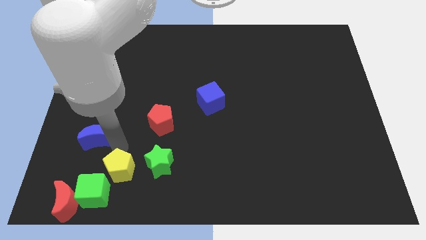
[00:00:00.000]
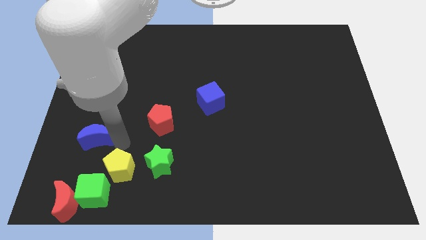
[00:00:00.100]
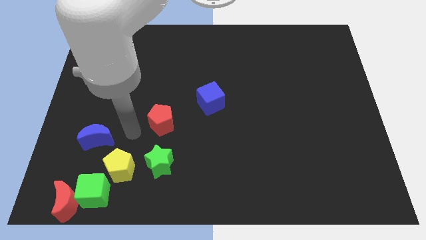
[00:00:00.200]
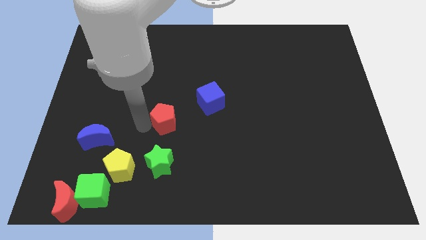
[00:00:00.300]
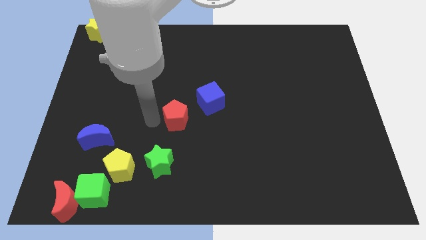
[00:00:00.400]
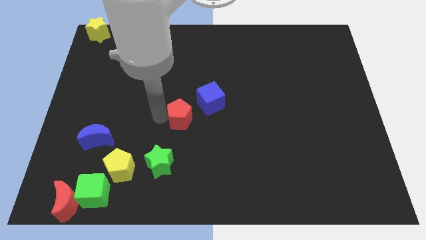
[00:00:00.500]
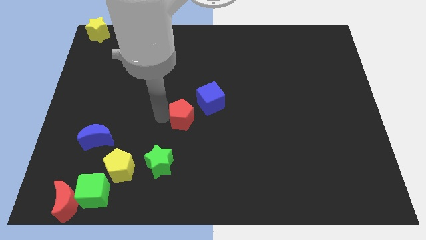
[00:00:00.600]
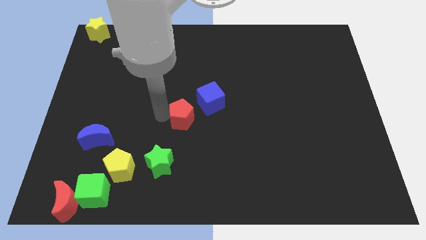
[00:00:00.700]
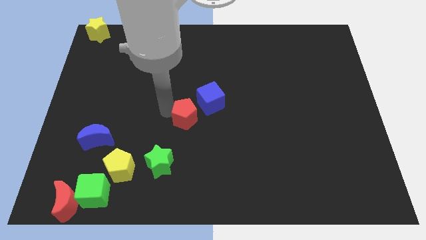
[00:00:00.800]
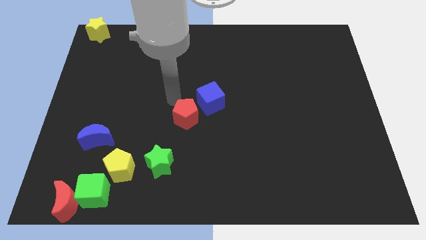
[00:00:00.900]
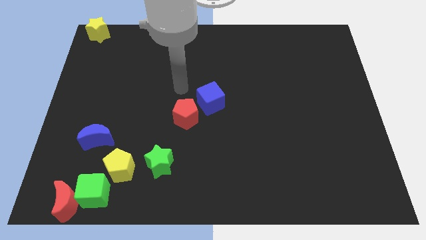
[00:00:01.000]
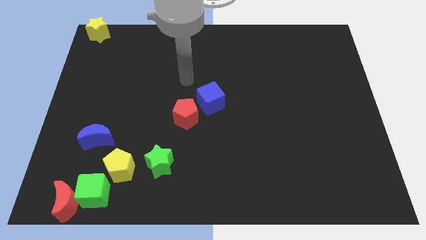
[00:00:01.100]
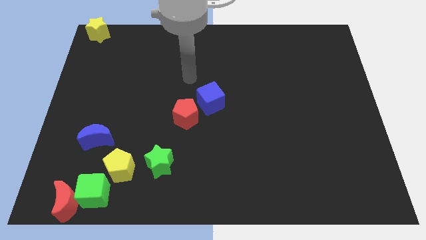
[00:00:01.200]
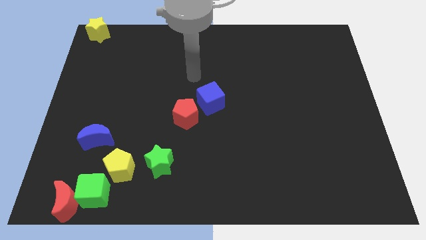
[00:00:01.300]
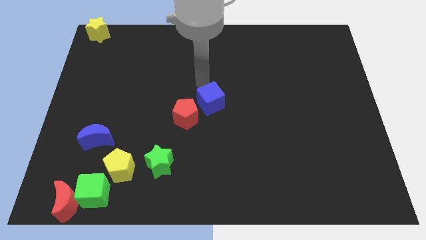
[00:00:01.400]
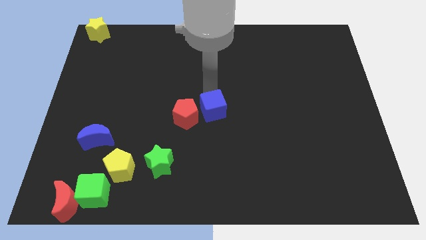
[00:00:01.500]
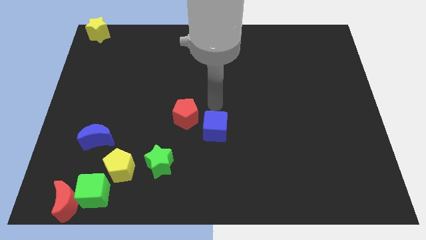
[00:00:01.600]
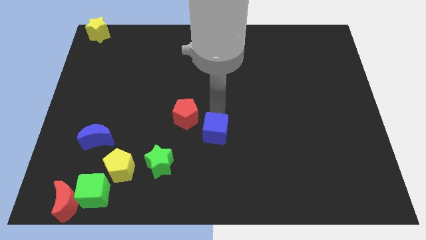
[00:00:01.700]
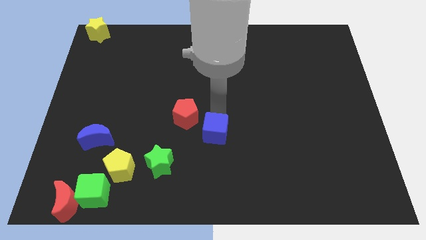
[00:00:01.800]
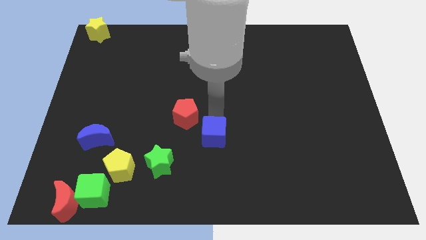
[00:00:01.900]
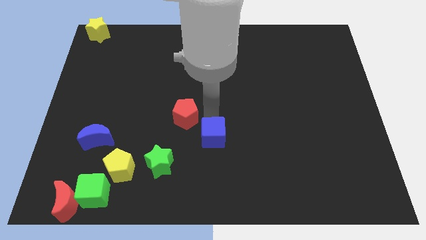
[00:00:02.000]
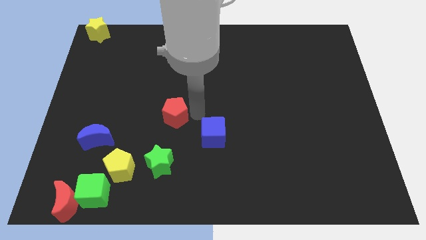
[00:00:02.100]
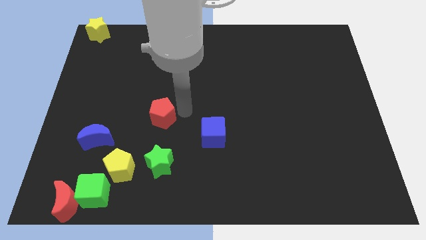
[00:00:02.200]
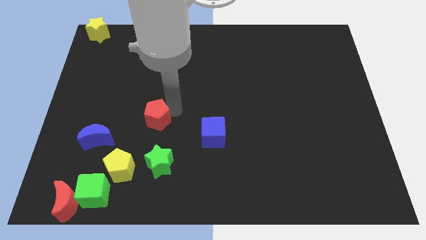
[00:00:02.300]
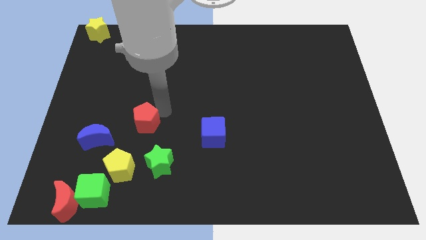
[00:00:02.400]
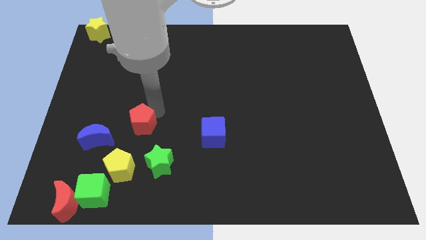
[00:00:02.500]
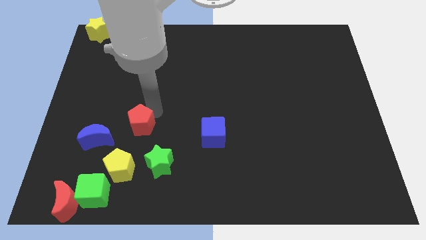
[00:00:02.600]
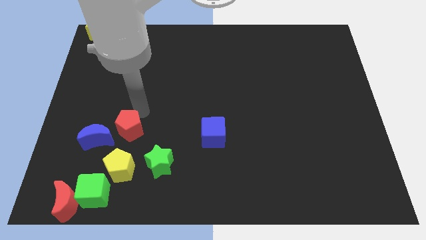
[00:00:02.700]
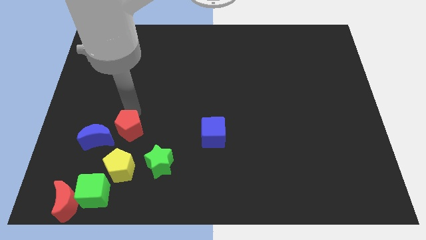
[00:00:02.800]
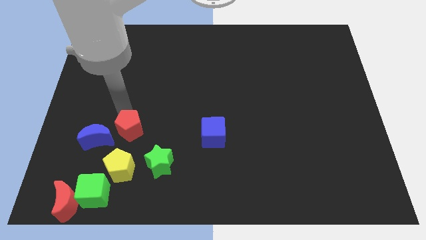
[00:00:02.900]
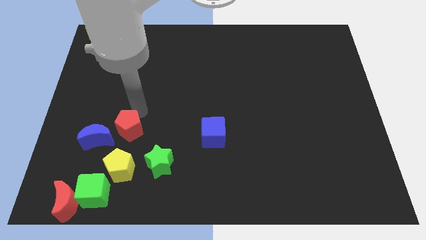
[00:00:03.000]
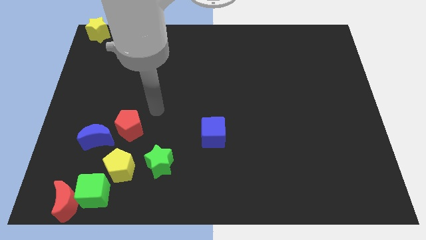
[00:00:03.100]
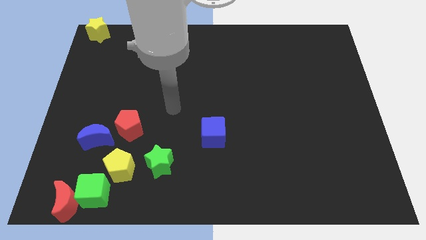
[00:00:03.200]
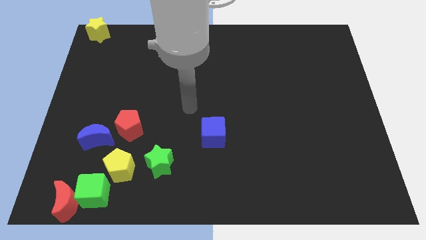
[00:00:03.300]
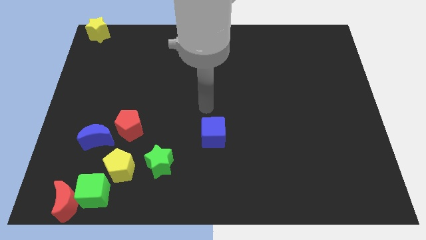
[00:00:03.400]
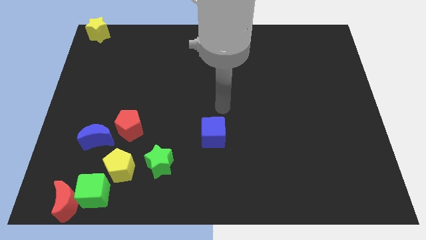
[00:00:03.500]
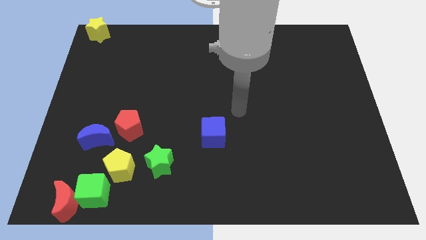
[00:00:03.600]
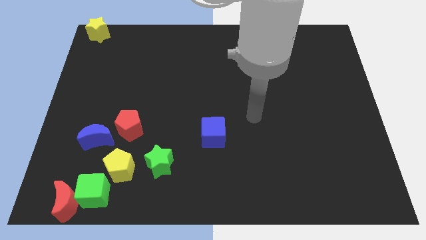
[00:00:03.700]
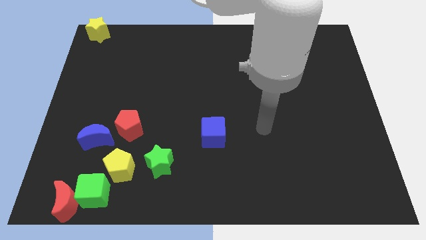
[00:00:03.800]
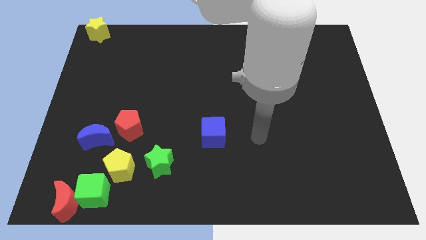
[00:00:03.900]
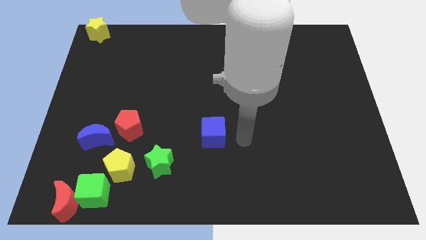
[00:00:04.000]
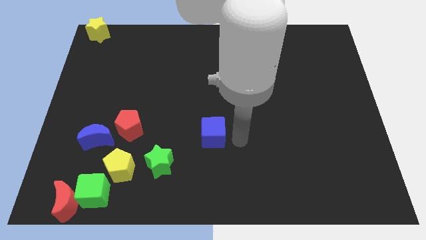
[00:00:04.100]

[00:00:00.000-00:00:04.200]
place the red pentagon above the yellow pentagon

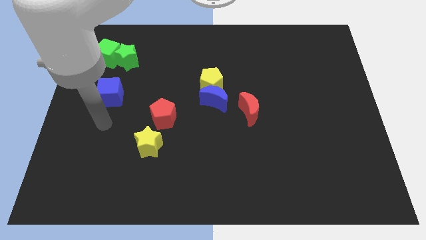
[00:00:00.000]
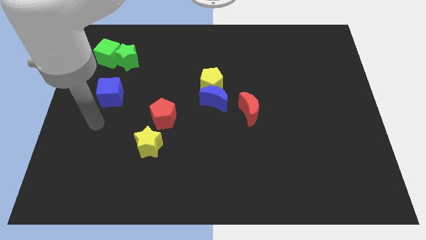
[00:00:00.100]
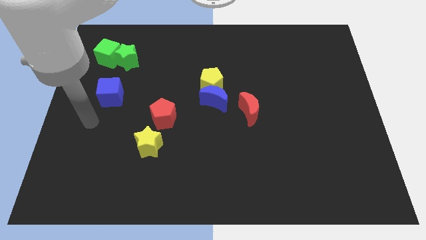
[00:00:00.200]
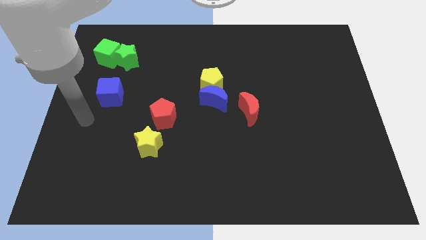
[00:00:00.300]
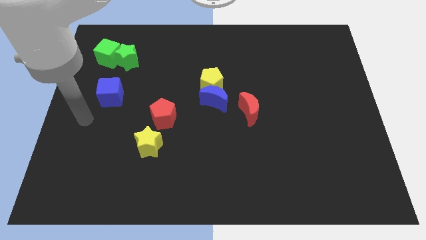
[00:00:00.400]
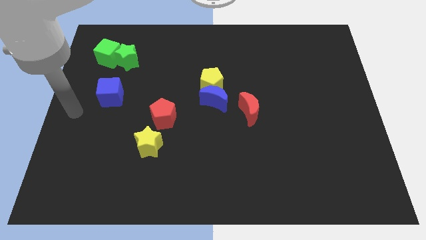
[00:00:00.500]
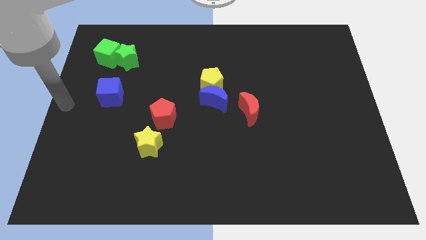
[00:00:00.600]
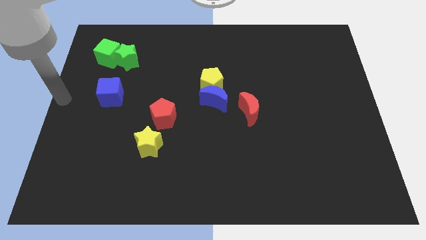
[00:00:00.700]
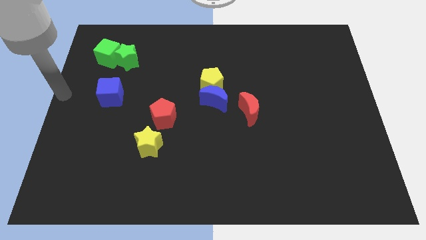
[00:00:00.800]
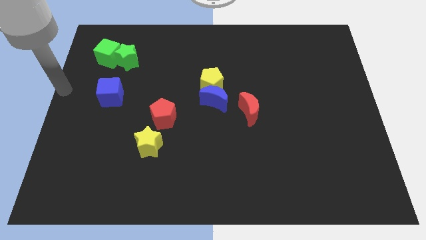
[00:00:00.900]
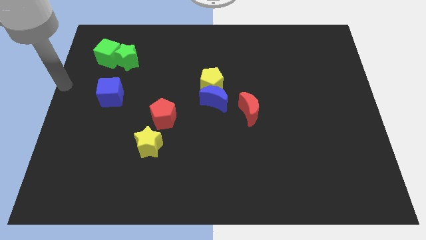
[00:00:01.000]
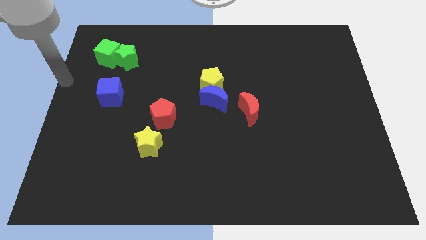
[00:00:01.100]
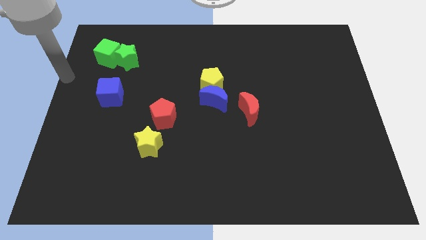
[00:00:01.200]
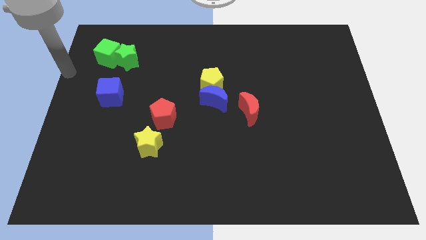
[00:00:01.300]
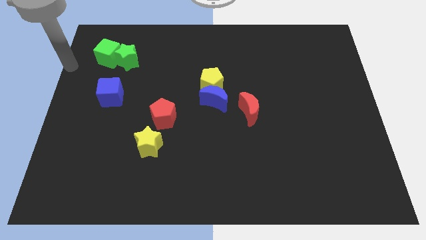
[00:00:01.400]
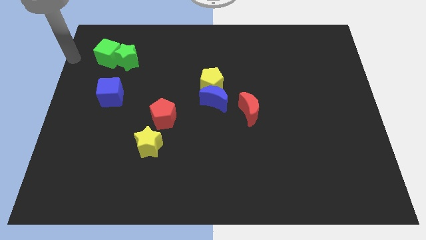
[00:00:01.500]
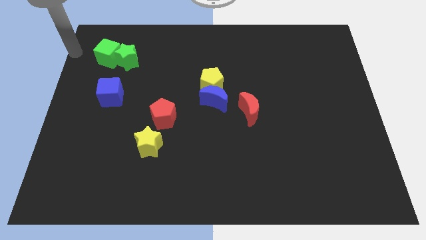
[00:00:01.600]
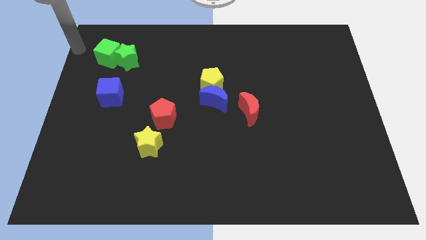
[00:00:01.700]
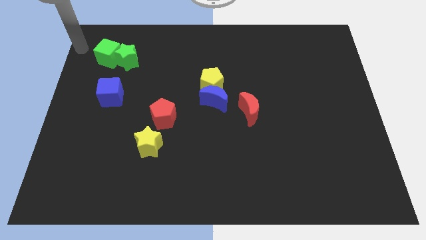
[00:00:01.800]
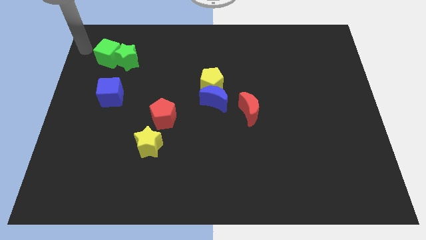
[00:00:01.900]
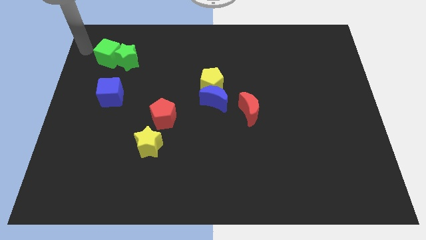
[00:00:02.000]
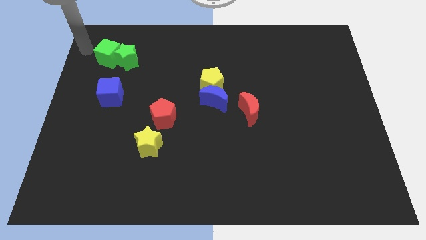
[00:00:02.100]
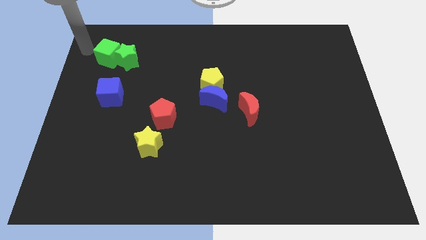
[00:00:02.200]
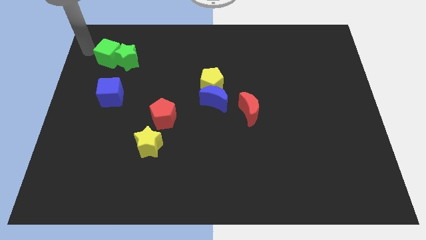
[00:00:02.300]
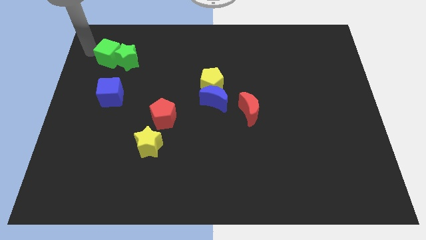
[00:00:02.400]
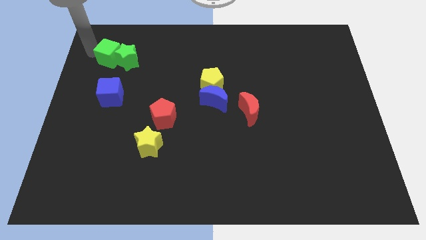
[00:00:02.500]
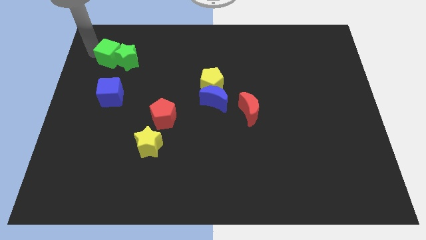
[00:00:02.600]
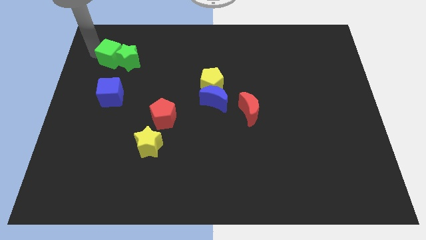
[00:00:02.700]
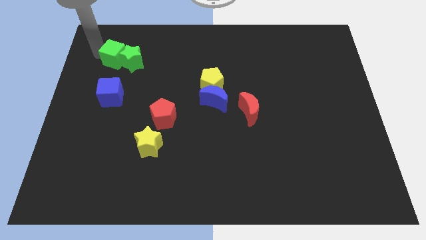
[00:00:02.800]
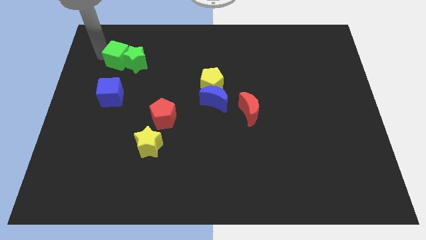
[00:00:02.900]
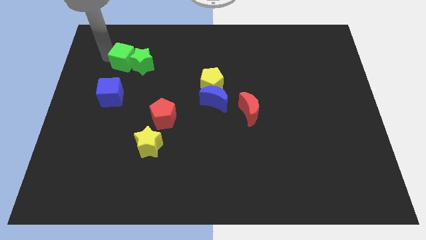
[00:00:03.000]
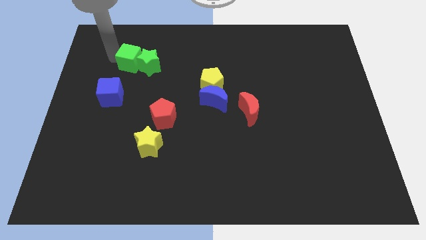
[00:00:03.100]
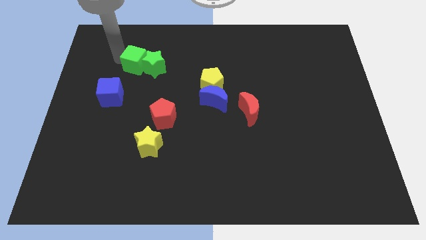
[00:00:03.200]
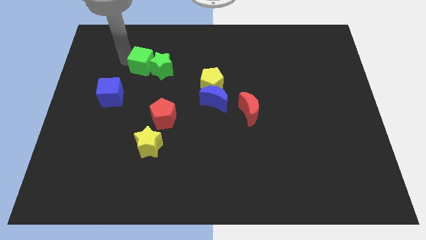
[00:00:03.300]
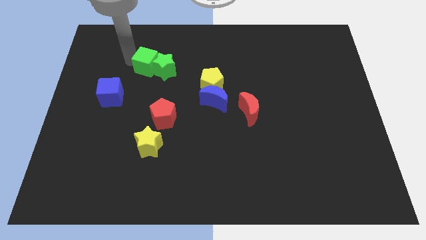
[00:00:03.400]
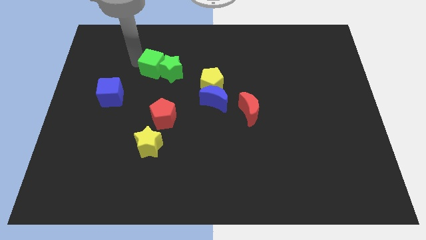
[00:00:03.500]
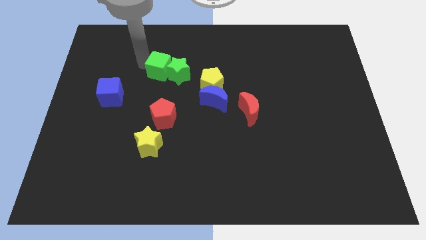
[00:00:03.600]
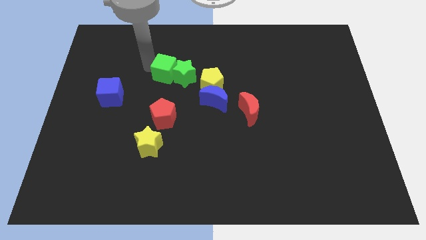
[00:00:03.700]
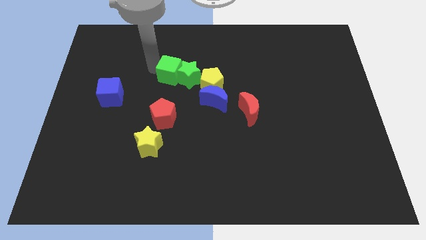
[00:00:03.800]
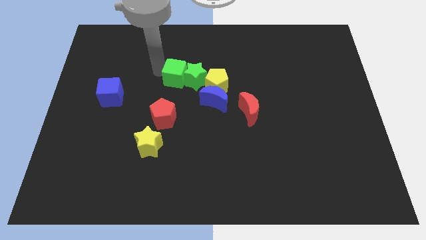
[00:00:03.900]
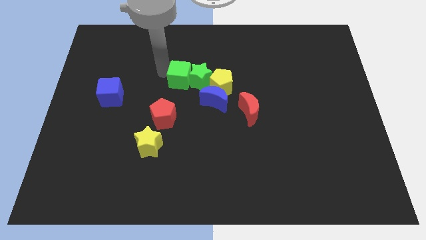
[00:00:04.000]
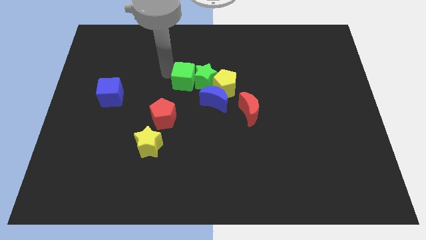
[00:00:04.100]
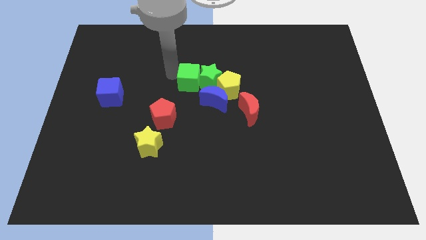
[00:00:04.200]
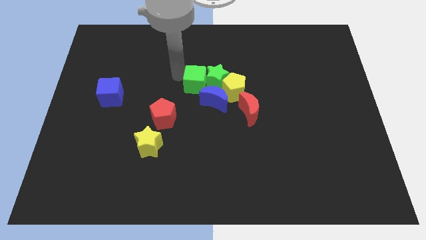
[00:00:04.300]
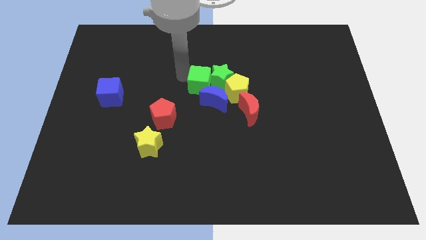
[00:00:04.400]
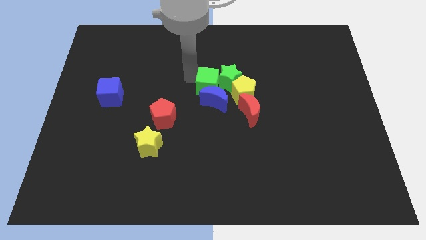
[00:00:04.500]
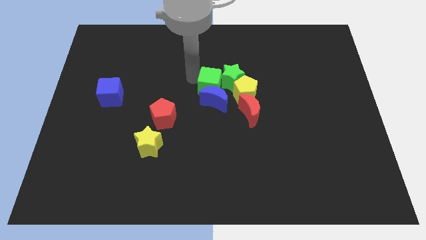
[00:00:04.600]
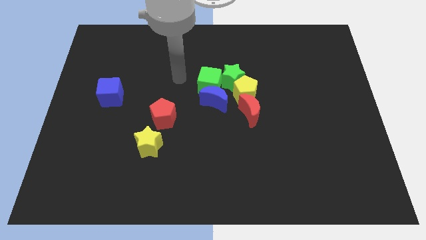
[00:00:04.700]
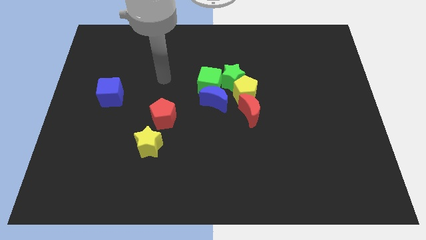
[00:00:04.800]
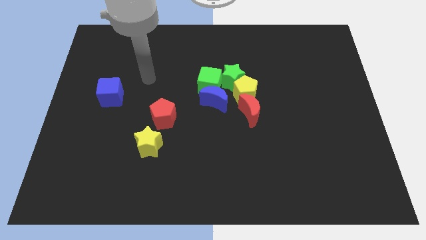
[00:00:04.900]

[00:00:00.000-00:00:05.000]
place the green cube above the blue crescent
